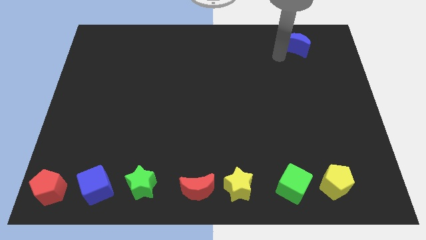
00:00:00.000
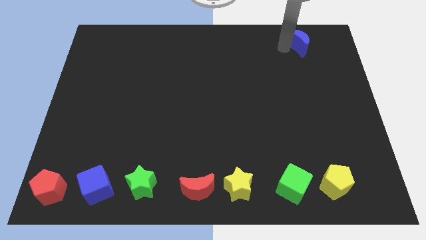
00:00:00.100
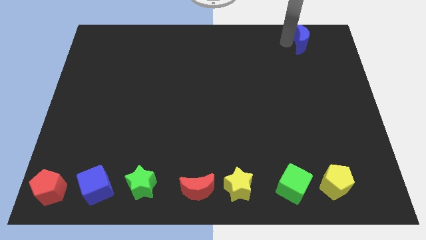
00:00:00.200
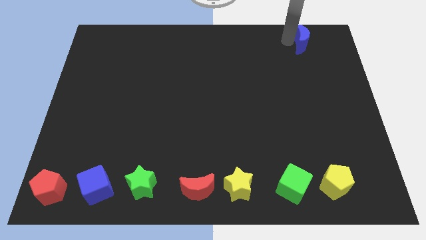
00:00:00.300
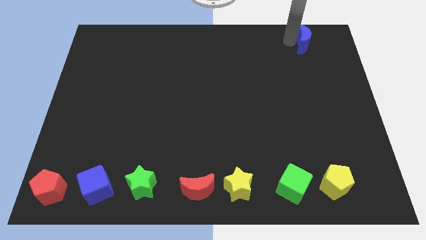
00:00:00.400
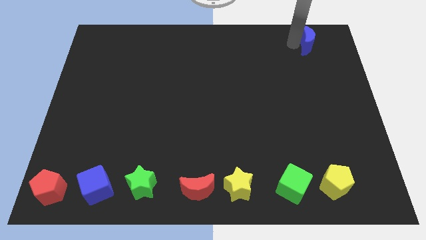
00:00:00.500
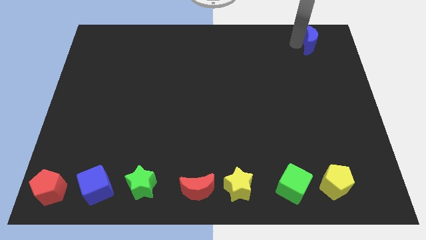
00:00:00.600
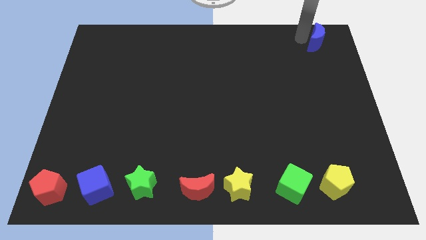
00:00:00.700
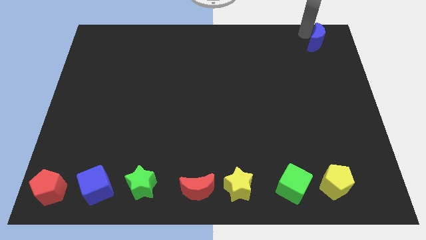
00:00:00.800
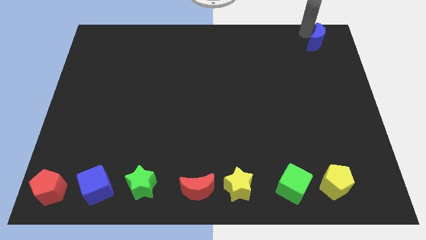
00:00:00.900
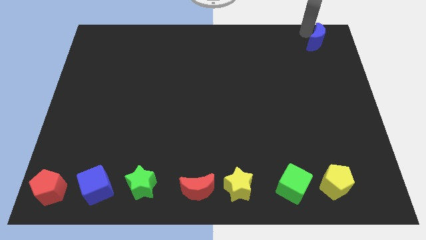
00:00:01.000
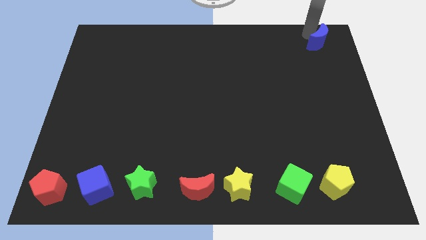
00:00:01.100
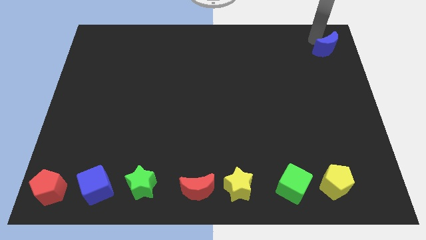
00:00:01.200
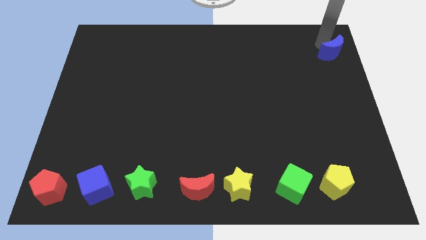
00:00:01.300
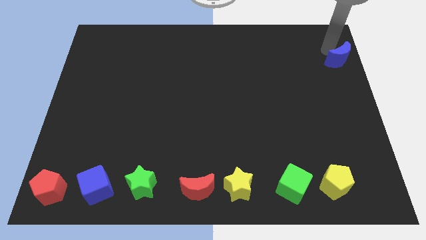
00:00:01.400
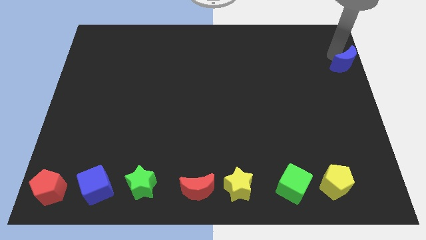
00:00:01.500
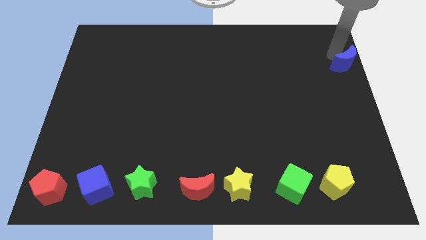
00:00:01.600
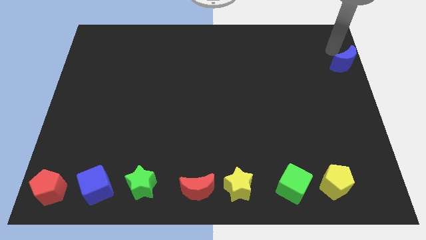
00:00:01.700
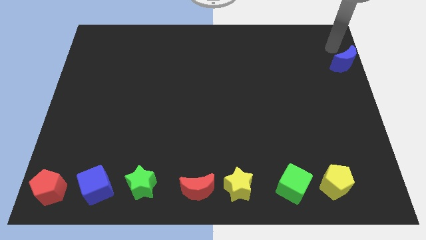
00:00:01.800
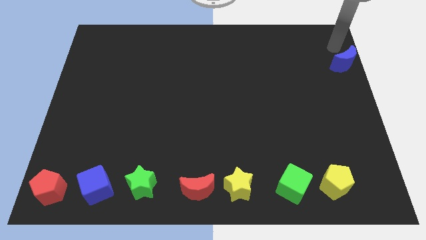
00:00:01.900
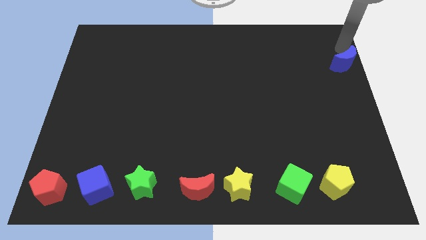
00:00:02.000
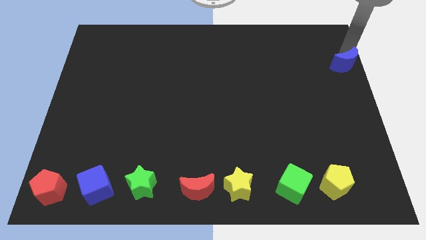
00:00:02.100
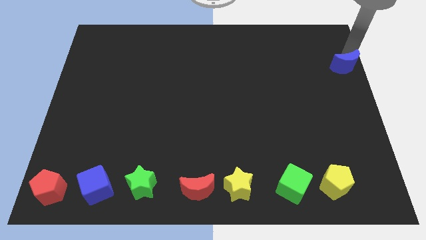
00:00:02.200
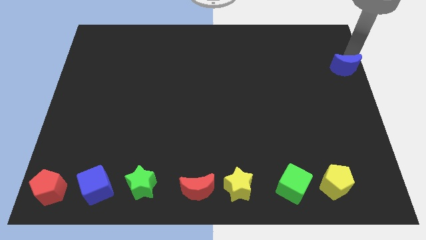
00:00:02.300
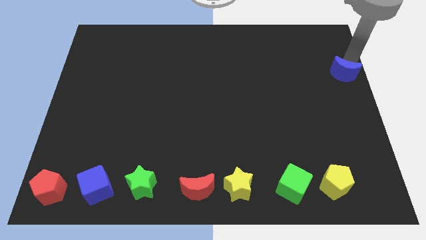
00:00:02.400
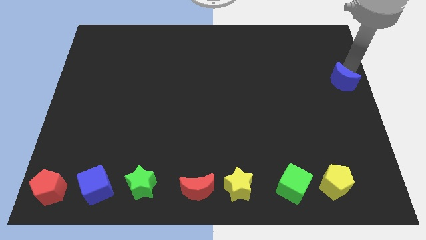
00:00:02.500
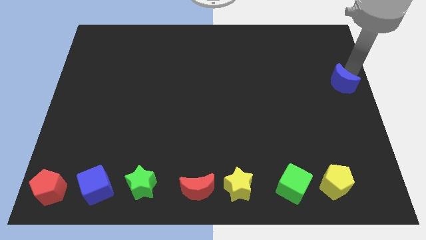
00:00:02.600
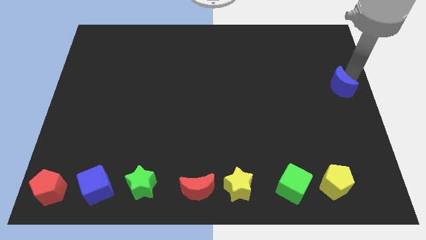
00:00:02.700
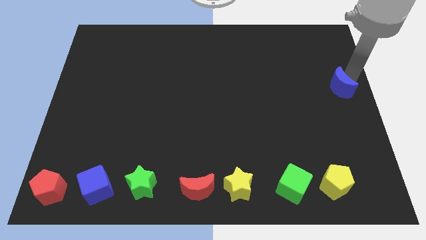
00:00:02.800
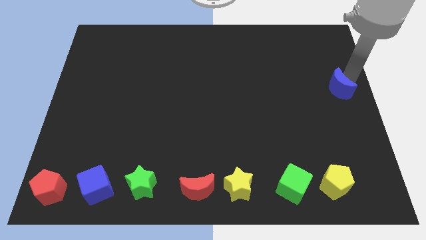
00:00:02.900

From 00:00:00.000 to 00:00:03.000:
push the blue crescent towards the center right

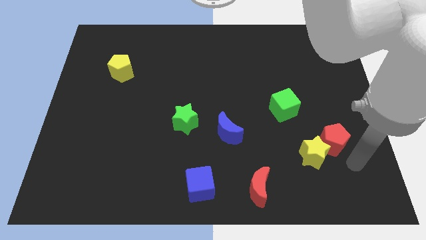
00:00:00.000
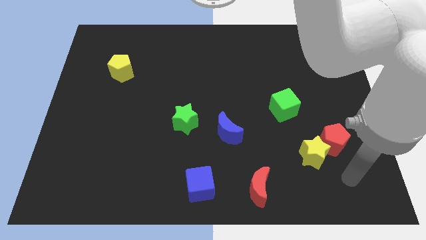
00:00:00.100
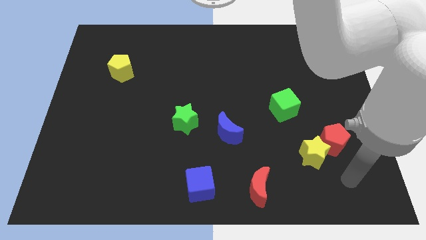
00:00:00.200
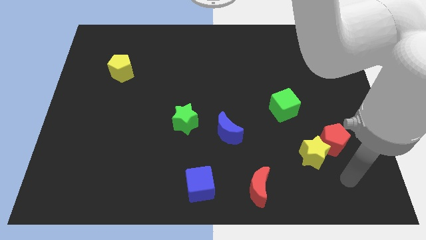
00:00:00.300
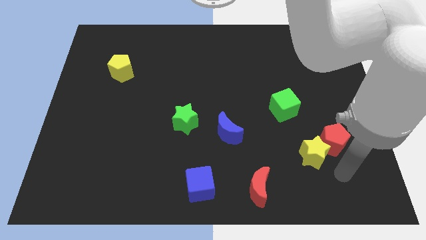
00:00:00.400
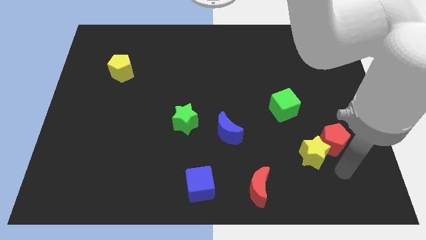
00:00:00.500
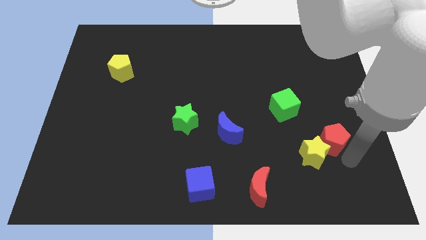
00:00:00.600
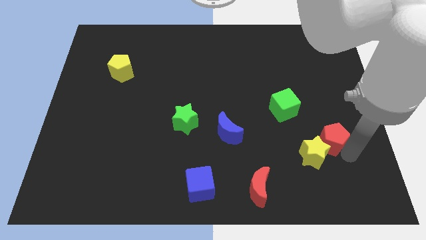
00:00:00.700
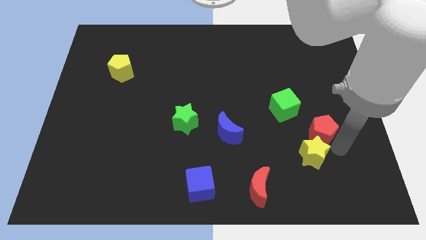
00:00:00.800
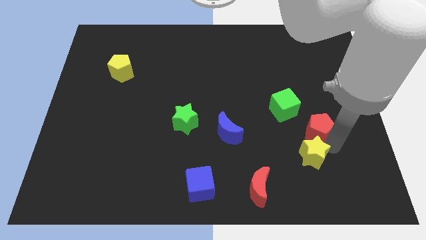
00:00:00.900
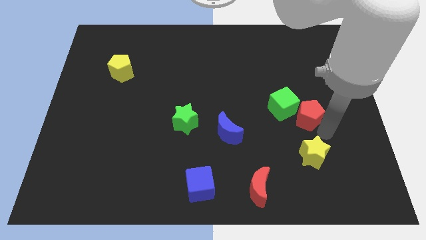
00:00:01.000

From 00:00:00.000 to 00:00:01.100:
slide red pentagon into green cube

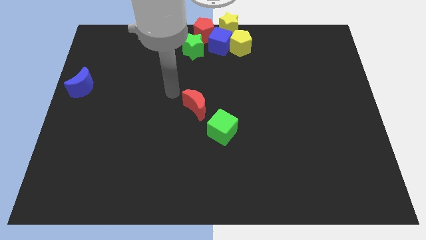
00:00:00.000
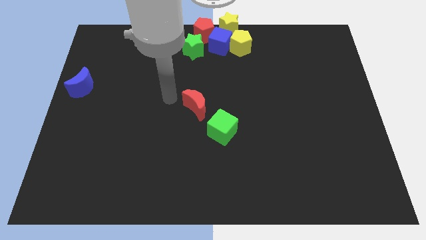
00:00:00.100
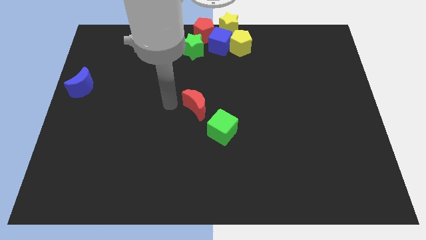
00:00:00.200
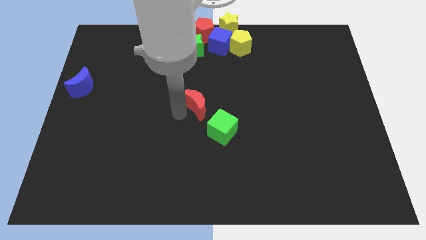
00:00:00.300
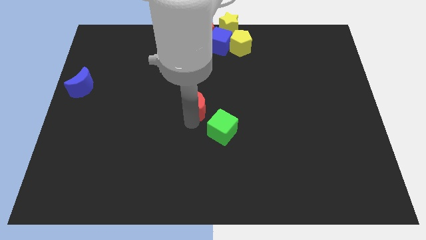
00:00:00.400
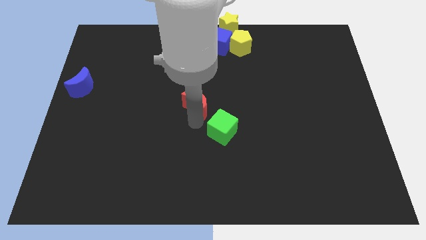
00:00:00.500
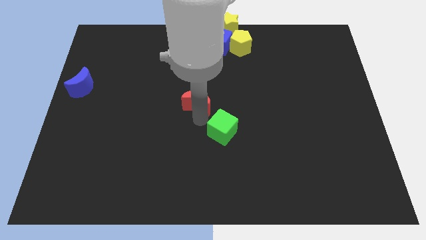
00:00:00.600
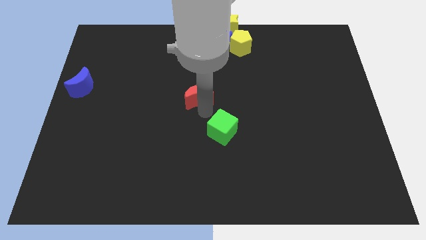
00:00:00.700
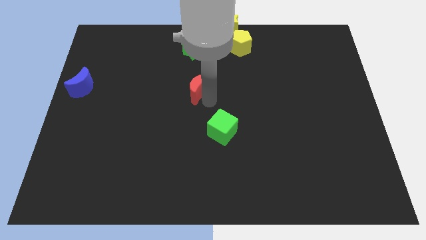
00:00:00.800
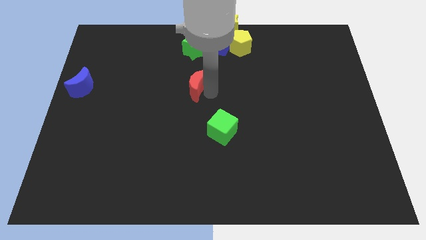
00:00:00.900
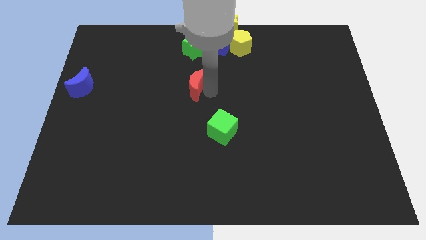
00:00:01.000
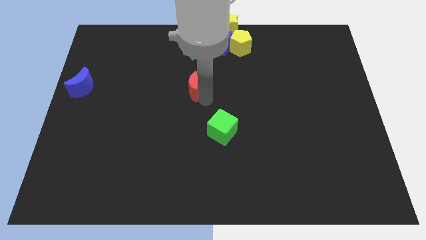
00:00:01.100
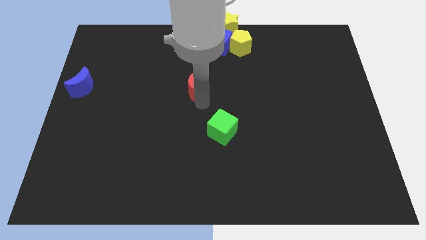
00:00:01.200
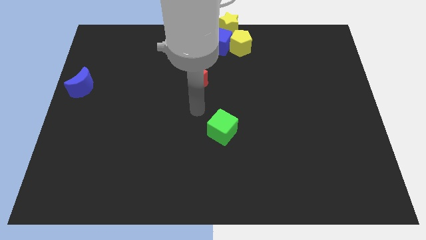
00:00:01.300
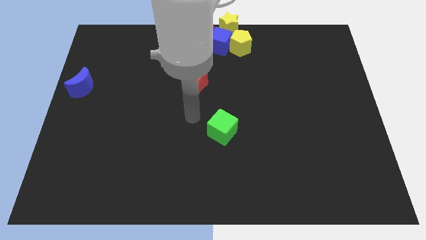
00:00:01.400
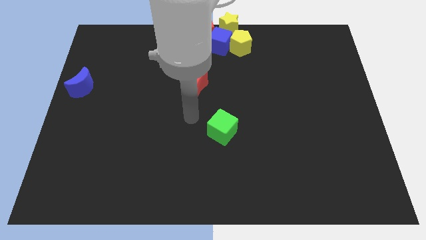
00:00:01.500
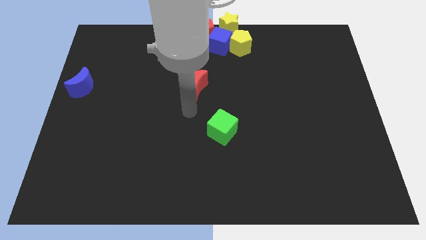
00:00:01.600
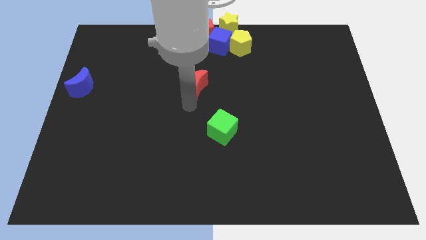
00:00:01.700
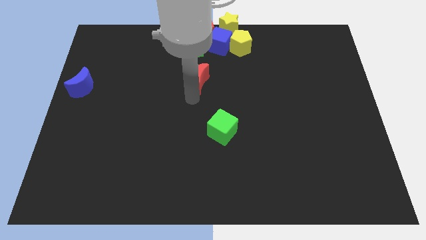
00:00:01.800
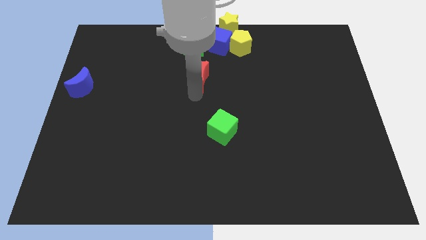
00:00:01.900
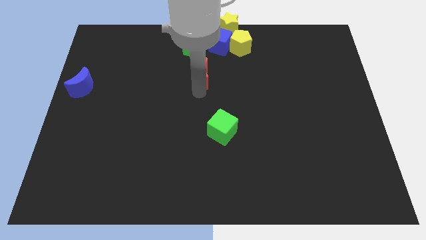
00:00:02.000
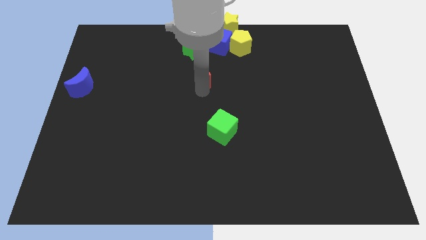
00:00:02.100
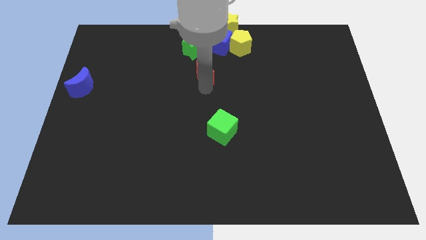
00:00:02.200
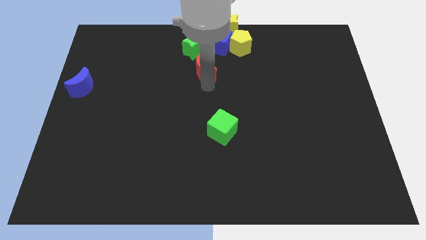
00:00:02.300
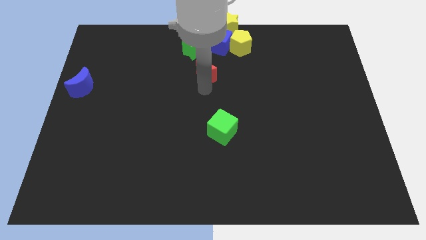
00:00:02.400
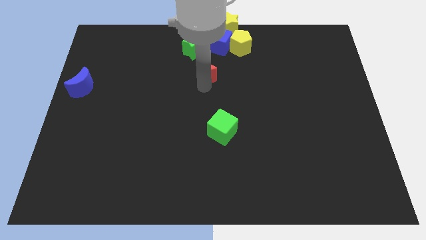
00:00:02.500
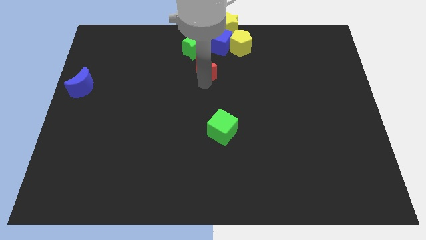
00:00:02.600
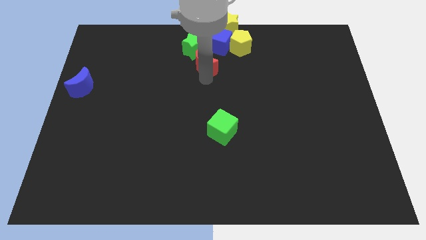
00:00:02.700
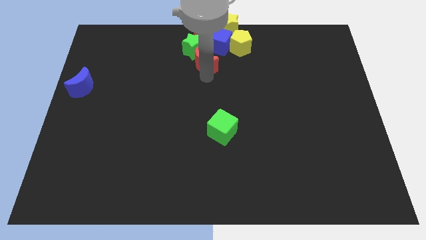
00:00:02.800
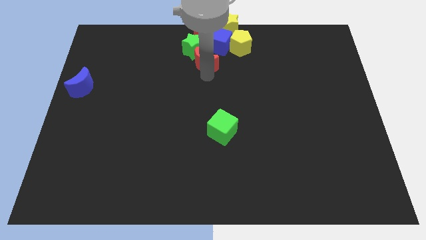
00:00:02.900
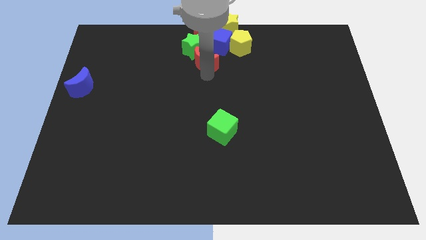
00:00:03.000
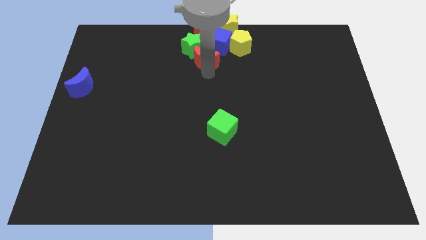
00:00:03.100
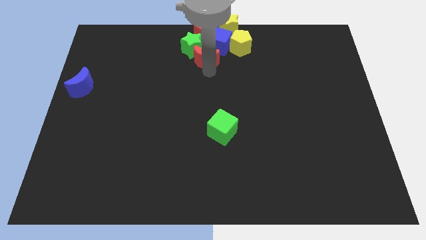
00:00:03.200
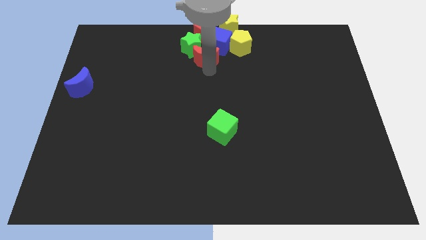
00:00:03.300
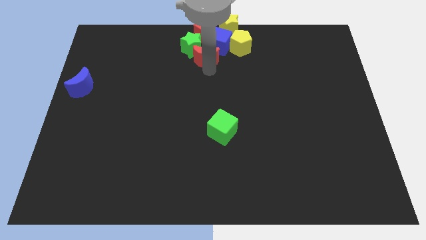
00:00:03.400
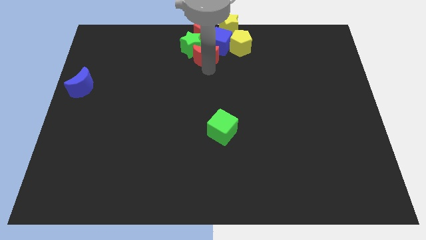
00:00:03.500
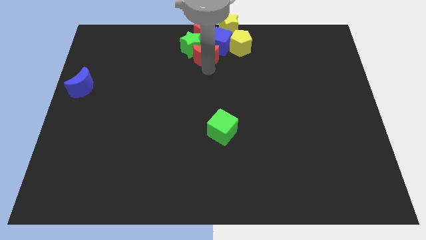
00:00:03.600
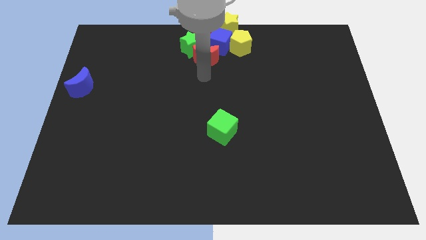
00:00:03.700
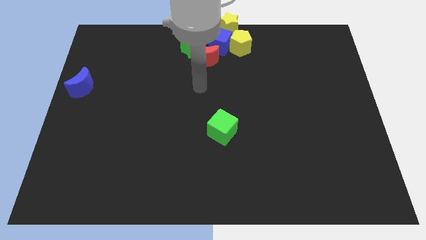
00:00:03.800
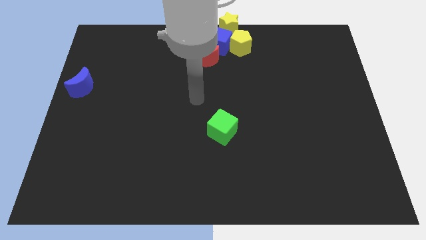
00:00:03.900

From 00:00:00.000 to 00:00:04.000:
move the red moon into the green star

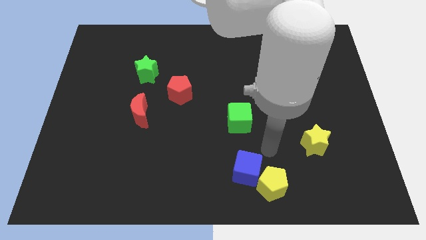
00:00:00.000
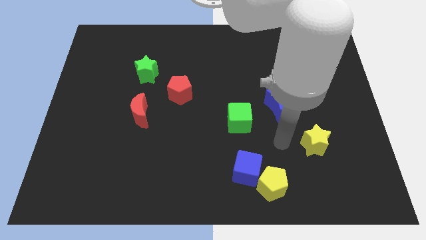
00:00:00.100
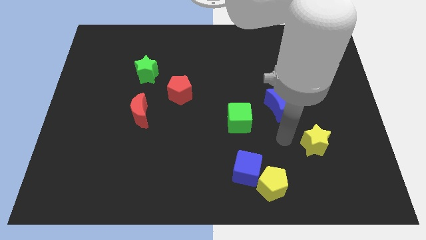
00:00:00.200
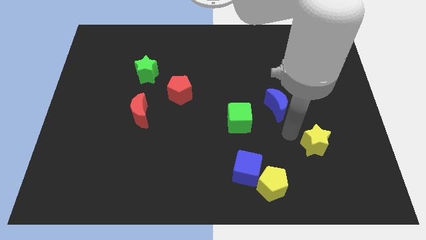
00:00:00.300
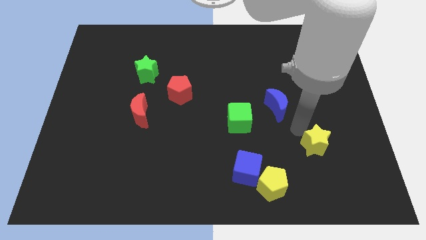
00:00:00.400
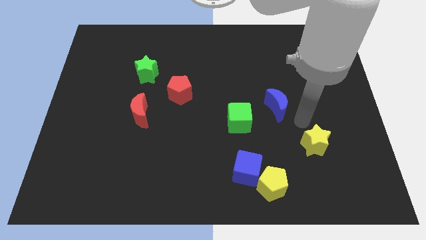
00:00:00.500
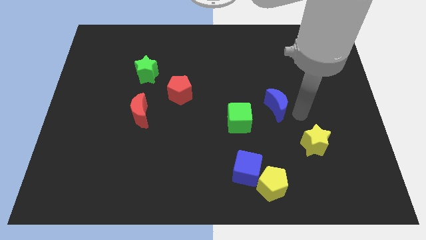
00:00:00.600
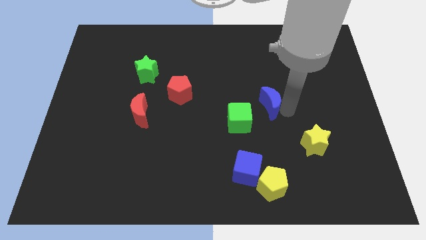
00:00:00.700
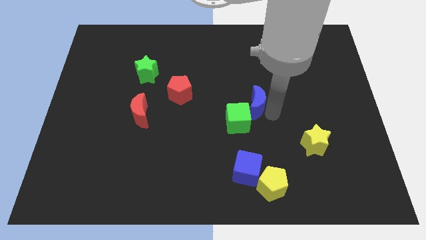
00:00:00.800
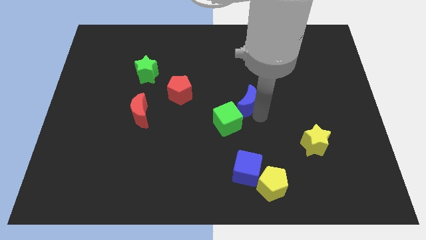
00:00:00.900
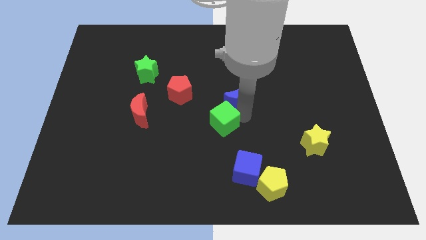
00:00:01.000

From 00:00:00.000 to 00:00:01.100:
push the blue crescent into the green cube
